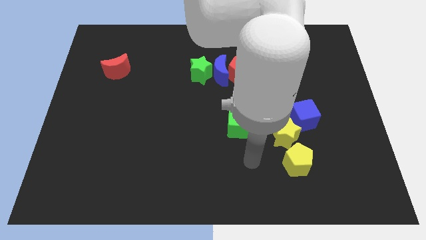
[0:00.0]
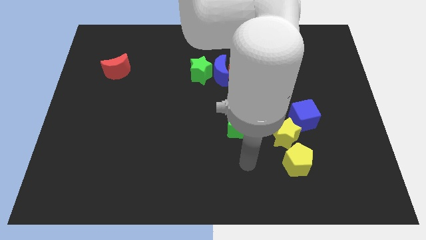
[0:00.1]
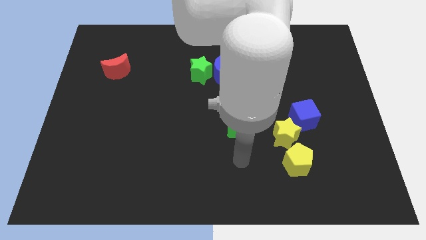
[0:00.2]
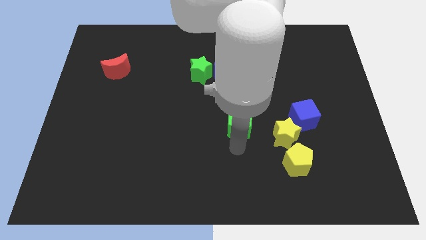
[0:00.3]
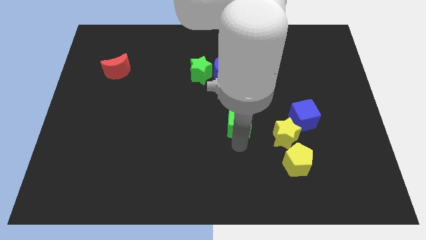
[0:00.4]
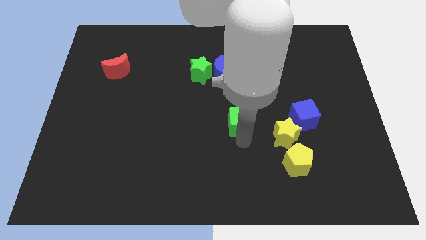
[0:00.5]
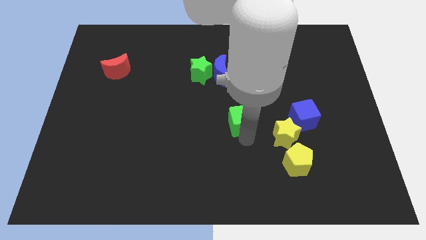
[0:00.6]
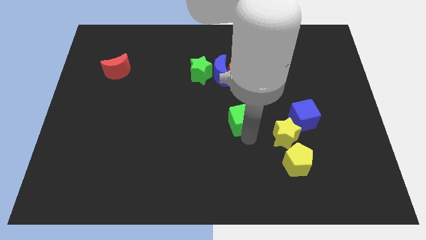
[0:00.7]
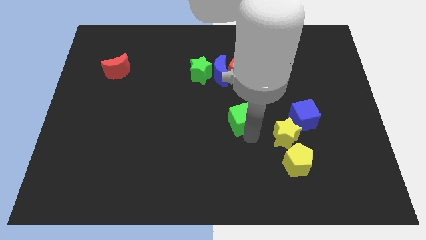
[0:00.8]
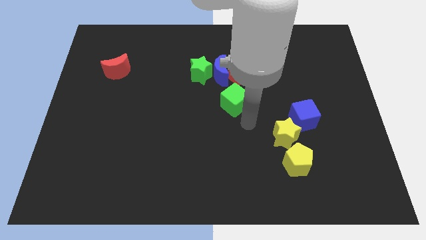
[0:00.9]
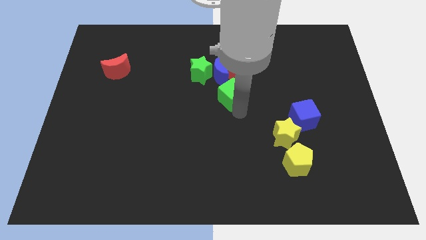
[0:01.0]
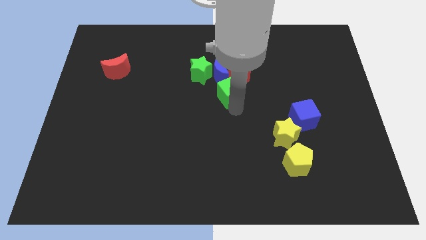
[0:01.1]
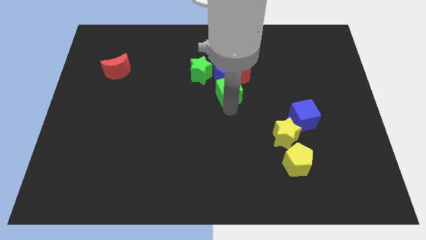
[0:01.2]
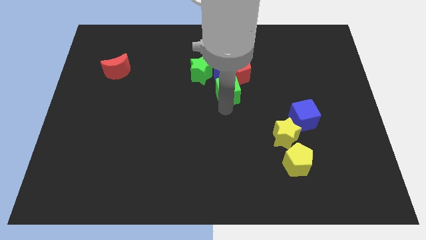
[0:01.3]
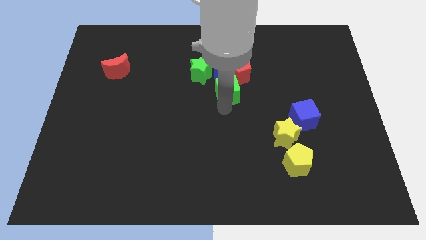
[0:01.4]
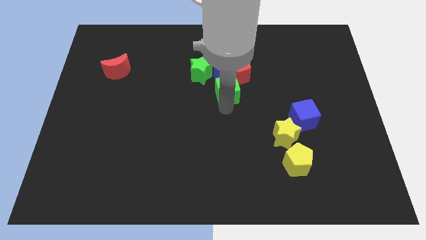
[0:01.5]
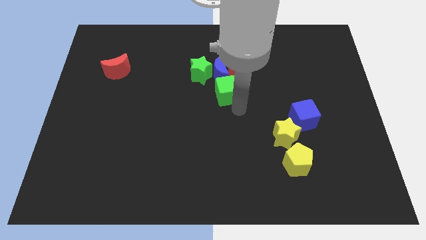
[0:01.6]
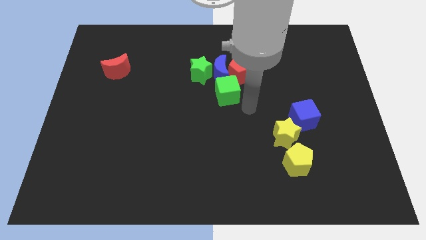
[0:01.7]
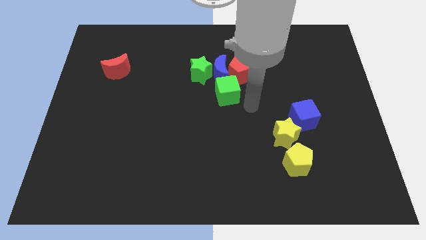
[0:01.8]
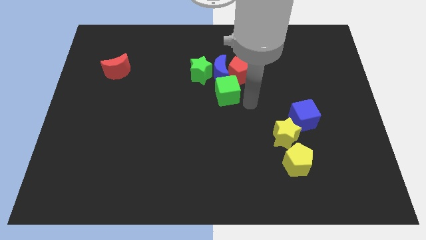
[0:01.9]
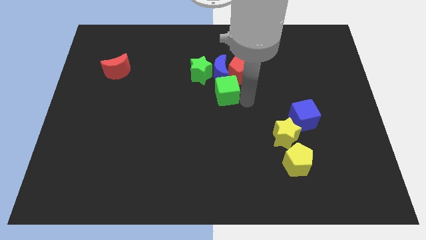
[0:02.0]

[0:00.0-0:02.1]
move the green cube below the blue moon

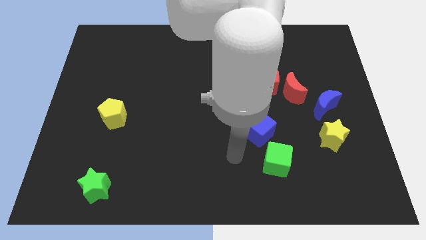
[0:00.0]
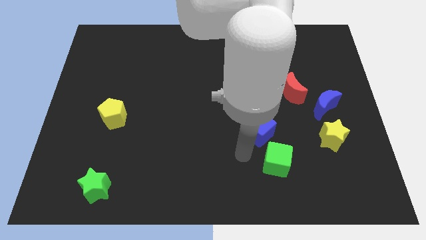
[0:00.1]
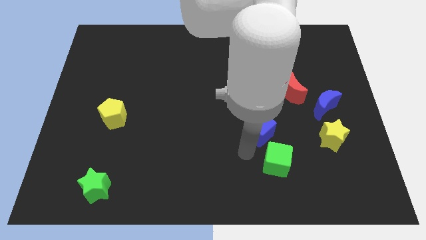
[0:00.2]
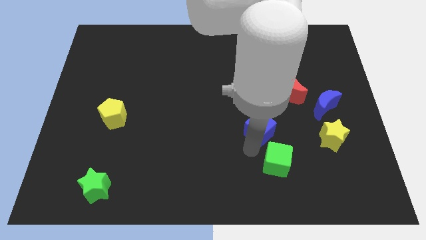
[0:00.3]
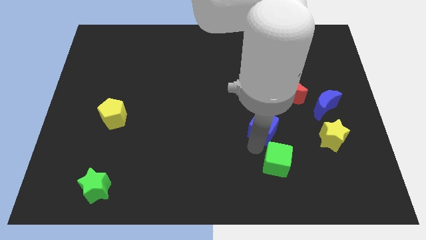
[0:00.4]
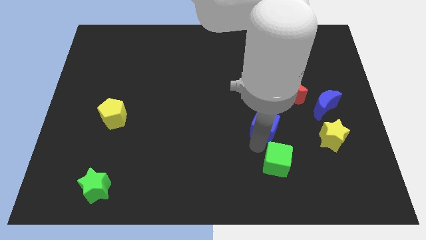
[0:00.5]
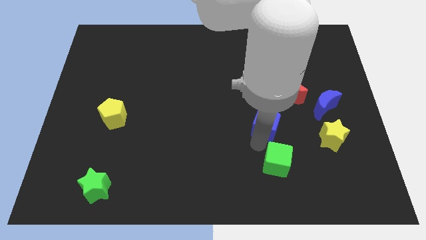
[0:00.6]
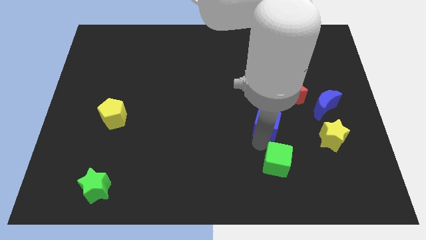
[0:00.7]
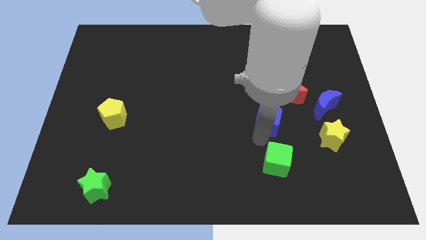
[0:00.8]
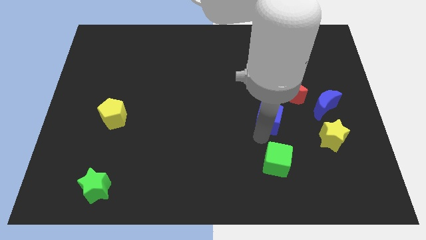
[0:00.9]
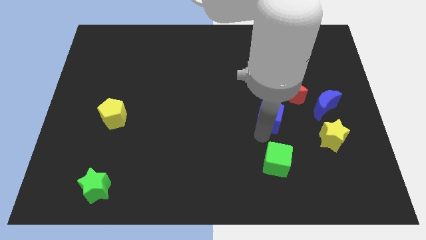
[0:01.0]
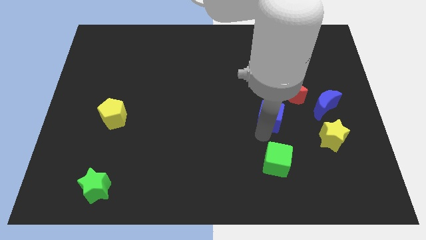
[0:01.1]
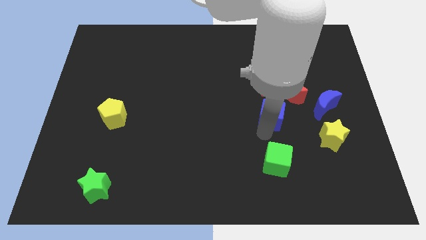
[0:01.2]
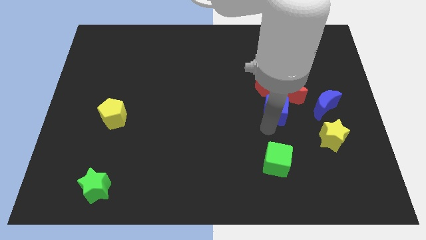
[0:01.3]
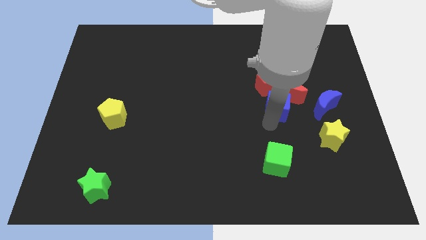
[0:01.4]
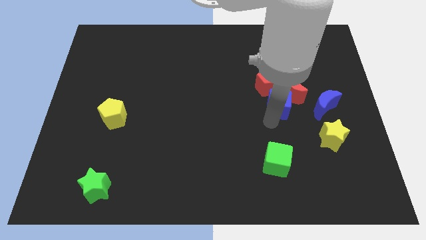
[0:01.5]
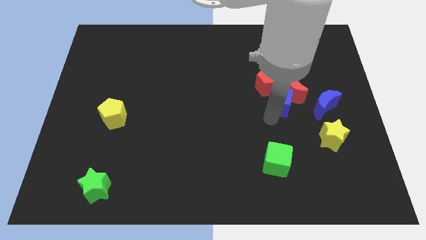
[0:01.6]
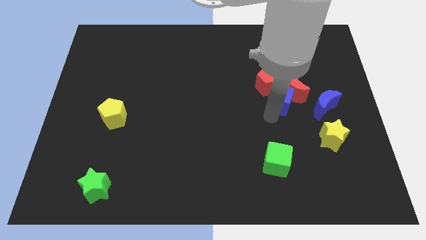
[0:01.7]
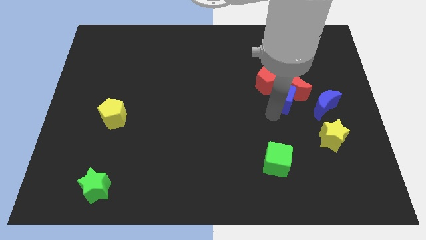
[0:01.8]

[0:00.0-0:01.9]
push the blue cube into the red blocks

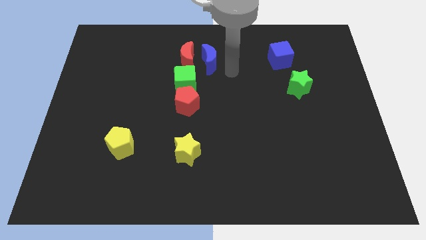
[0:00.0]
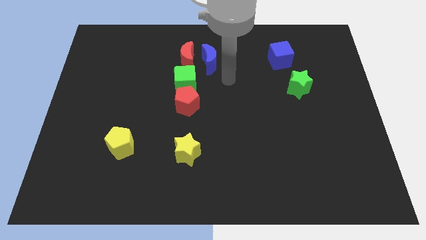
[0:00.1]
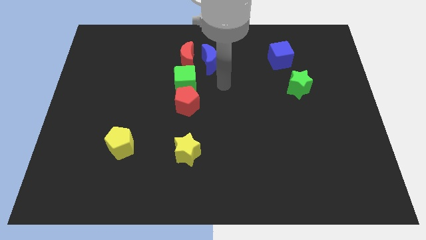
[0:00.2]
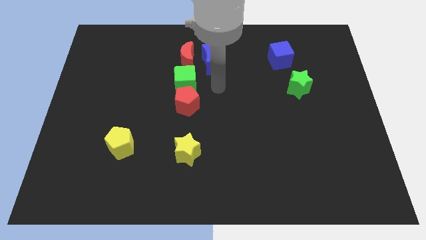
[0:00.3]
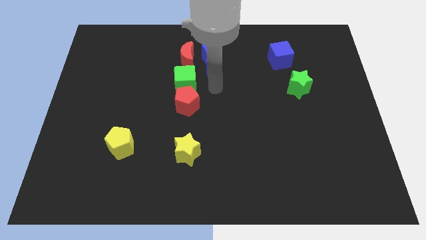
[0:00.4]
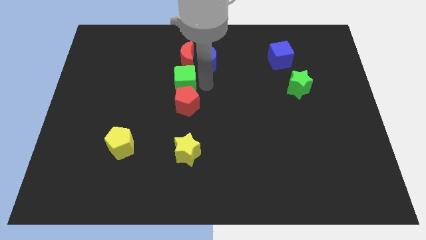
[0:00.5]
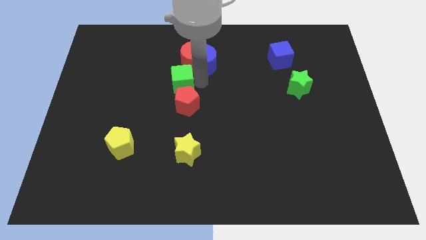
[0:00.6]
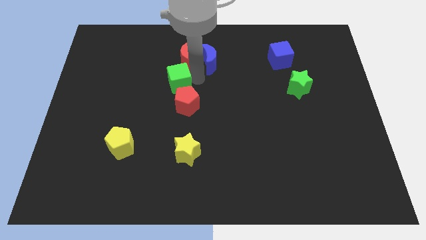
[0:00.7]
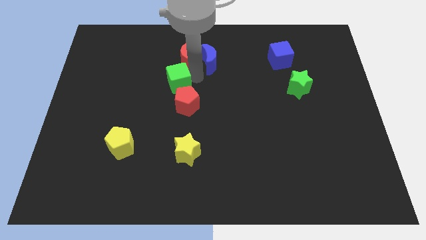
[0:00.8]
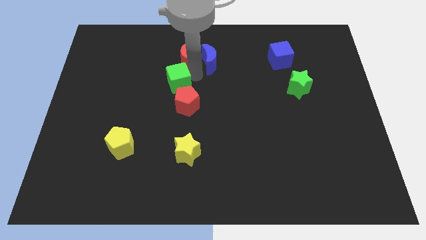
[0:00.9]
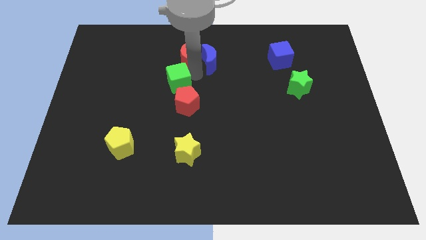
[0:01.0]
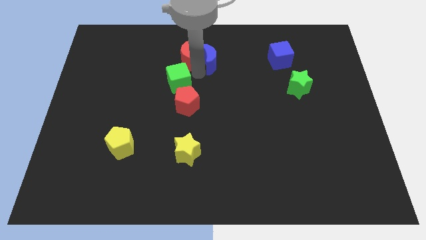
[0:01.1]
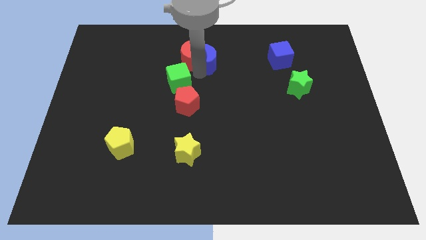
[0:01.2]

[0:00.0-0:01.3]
slightly touch to the green cube

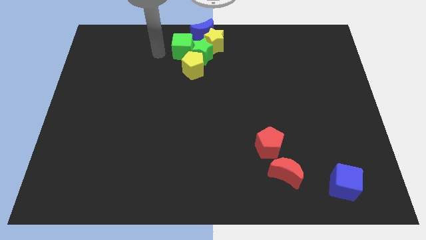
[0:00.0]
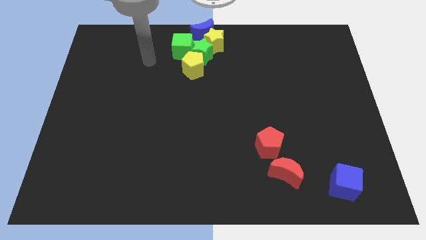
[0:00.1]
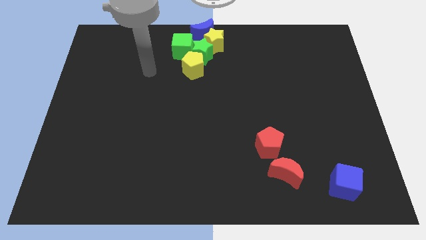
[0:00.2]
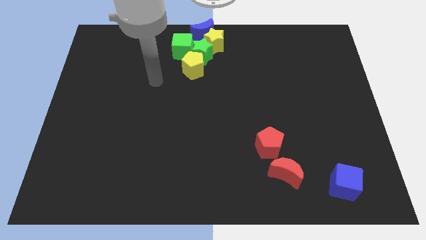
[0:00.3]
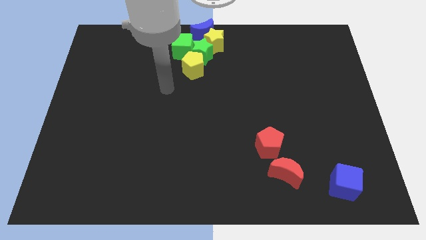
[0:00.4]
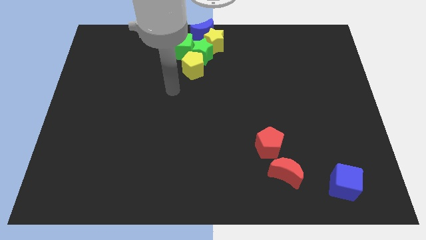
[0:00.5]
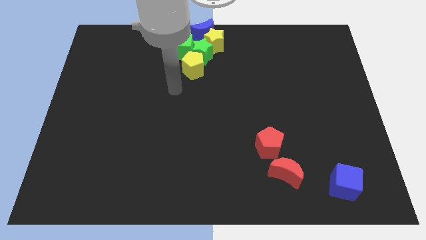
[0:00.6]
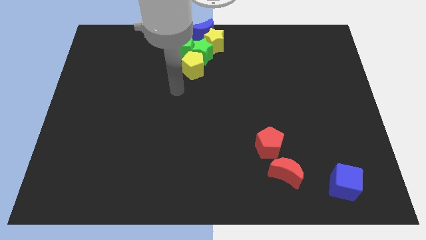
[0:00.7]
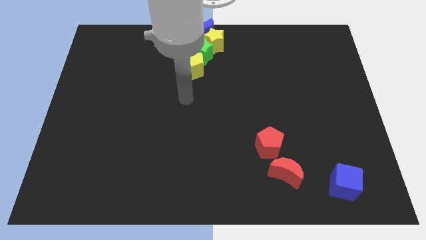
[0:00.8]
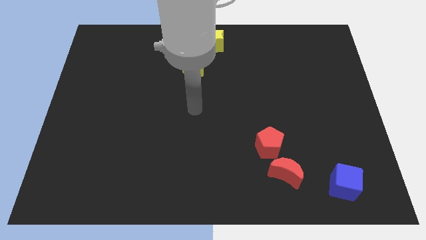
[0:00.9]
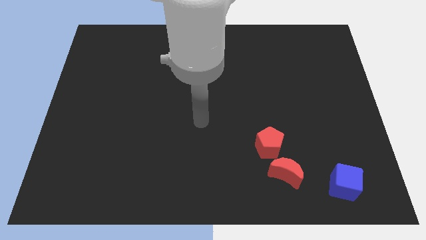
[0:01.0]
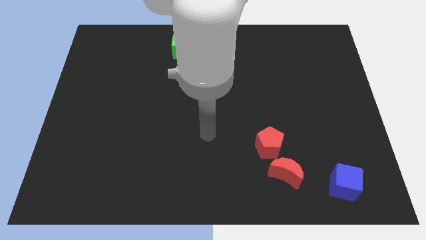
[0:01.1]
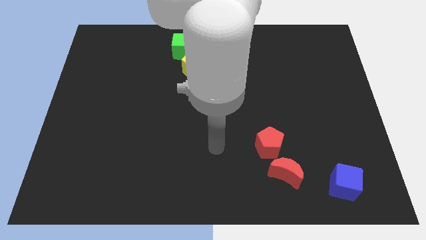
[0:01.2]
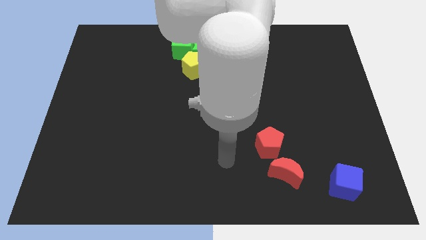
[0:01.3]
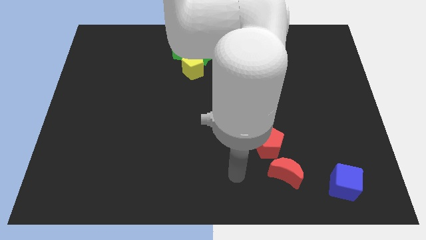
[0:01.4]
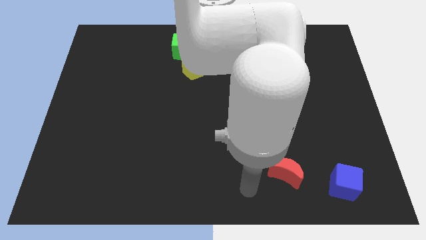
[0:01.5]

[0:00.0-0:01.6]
move away from the green cube

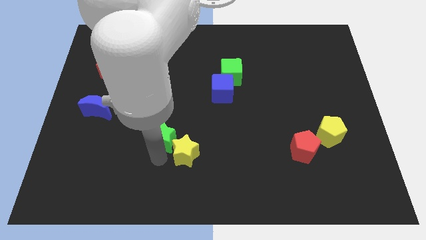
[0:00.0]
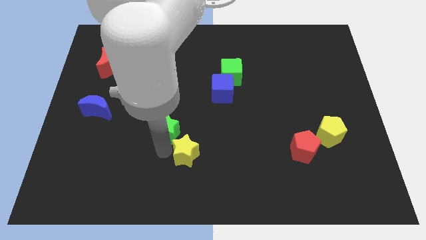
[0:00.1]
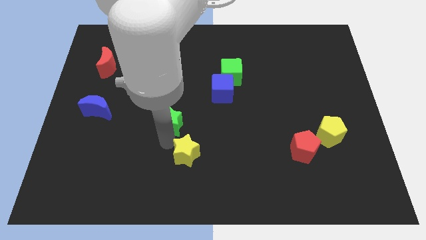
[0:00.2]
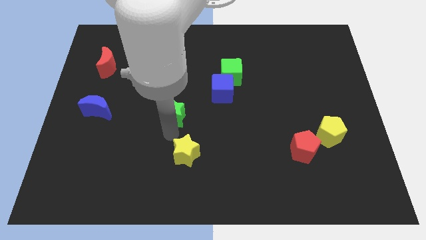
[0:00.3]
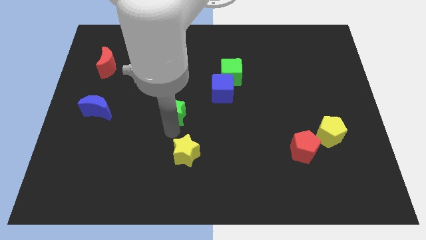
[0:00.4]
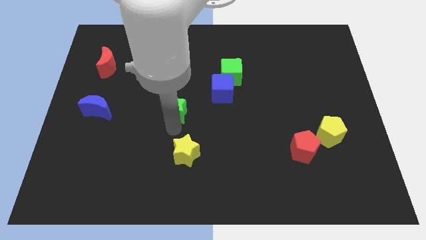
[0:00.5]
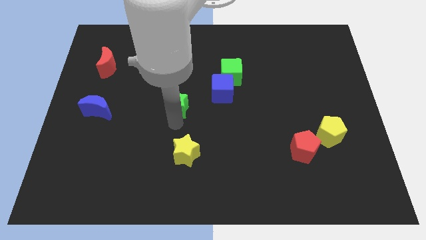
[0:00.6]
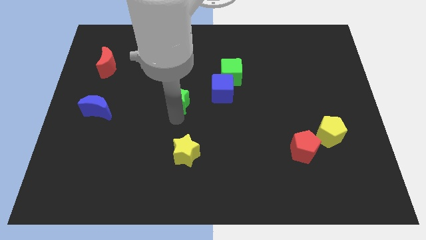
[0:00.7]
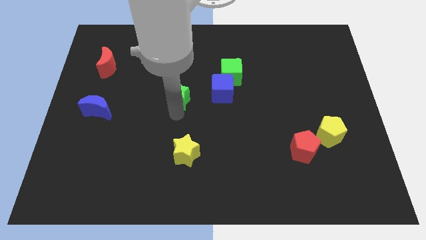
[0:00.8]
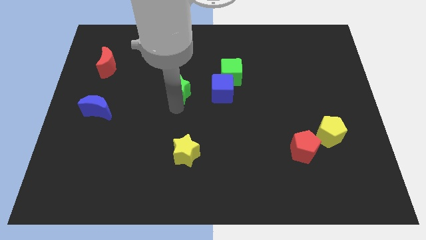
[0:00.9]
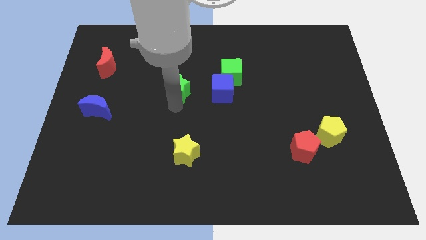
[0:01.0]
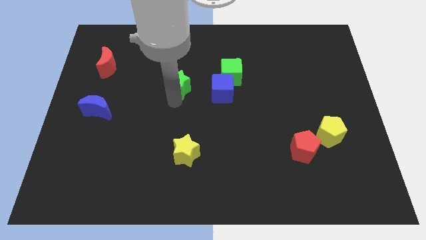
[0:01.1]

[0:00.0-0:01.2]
place green star parallel left to blue cube

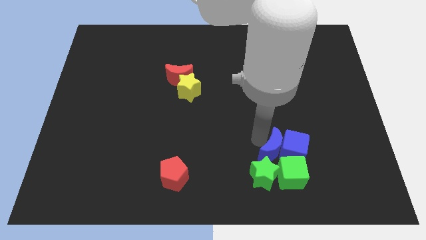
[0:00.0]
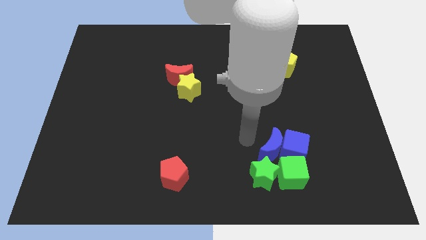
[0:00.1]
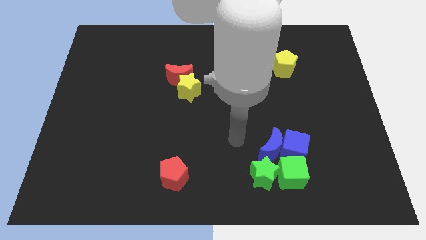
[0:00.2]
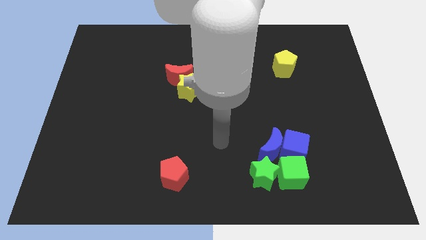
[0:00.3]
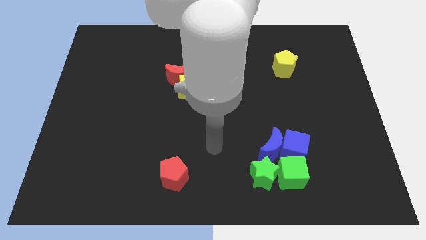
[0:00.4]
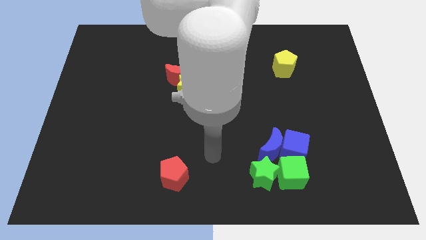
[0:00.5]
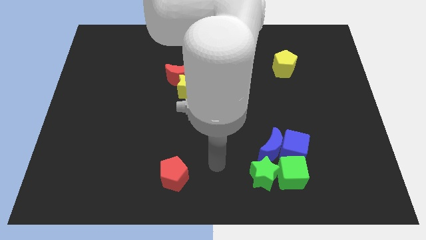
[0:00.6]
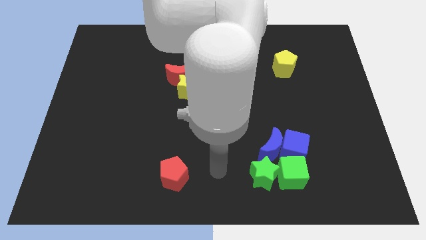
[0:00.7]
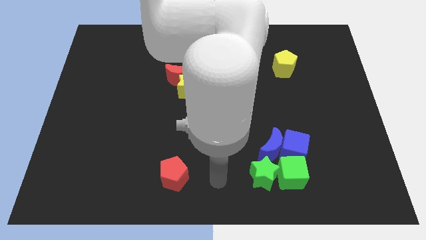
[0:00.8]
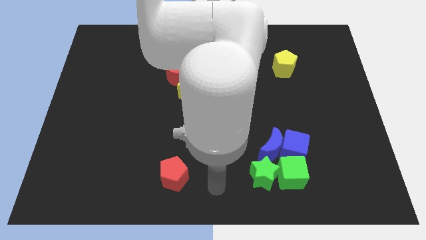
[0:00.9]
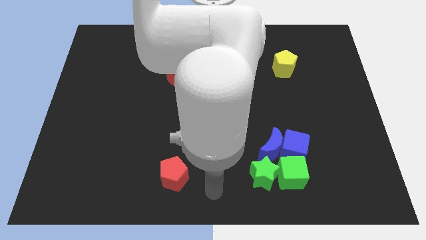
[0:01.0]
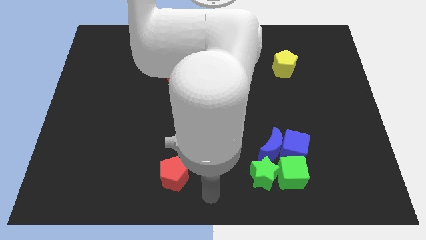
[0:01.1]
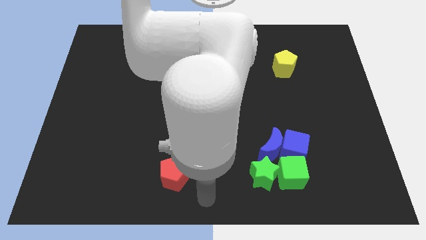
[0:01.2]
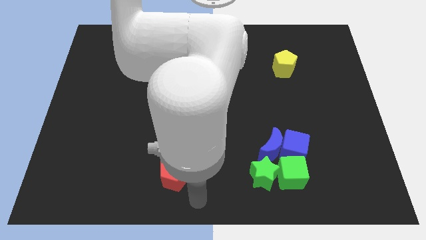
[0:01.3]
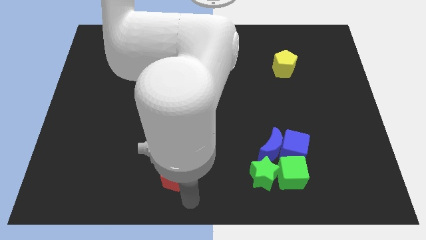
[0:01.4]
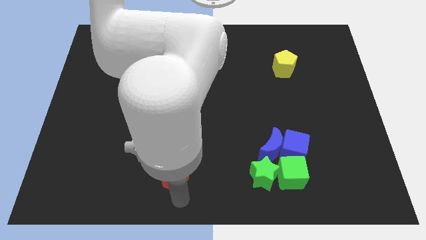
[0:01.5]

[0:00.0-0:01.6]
move your arm towards the bottom of the red pentagon
